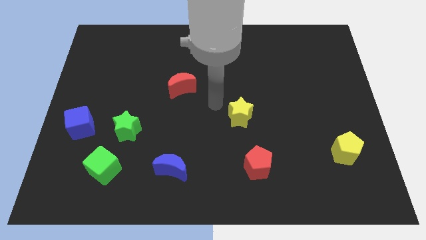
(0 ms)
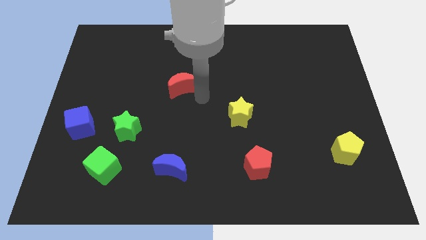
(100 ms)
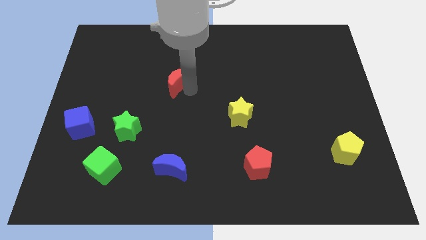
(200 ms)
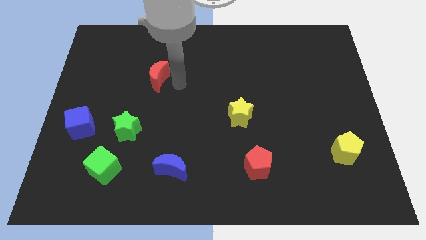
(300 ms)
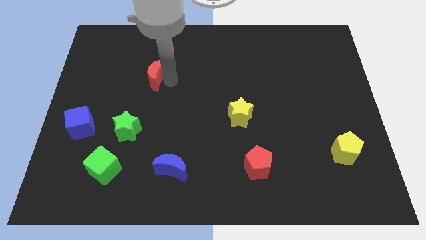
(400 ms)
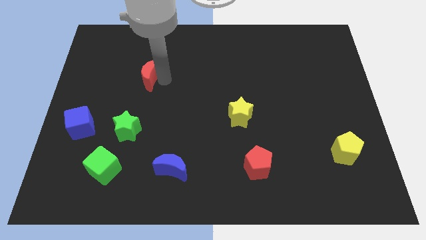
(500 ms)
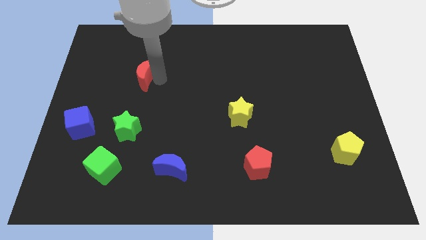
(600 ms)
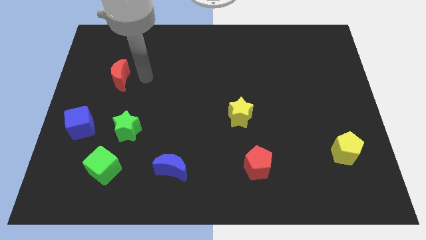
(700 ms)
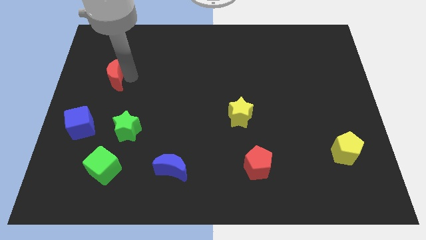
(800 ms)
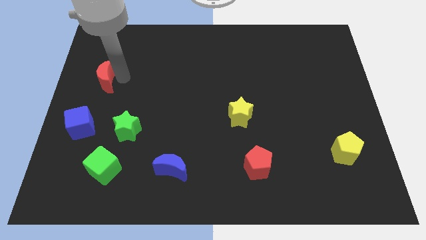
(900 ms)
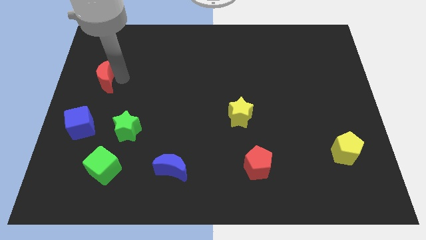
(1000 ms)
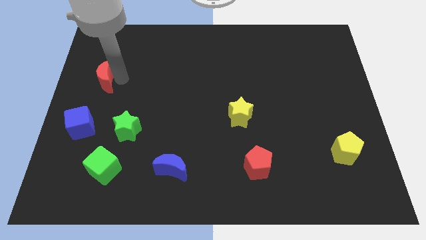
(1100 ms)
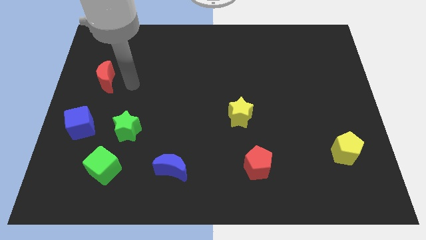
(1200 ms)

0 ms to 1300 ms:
push the red crescent diagonally on the top left side of the green star

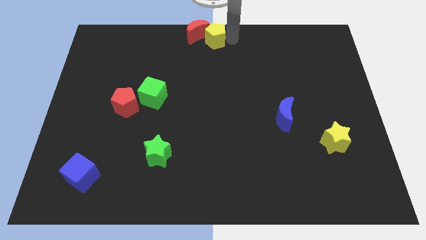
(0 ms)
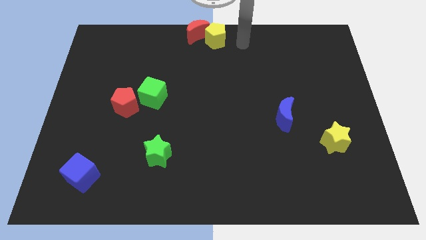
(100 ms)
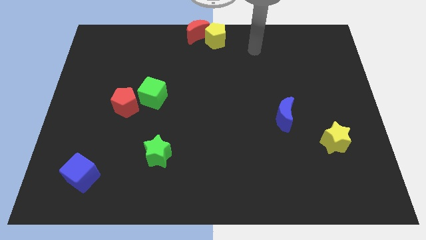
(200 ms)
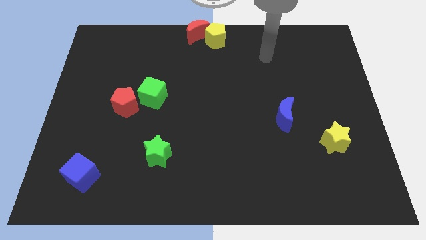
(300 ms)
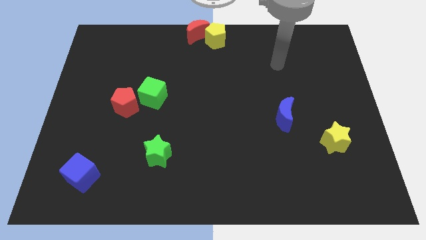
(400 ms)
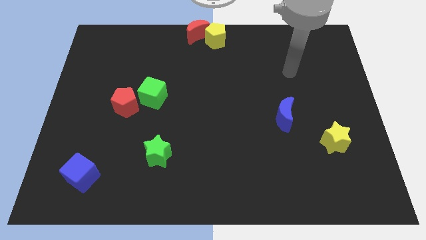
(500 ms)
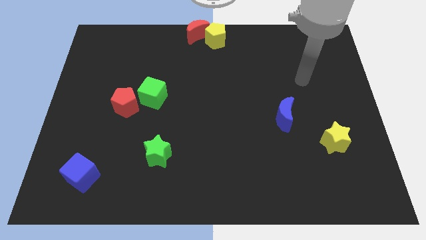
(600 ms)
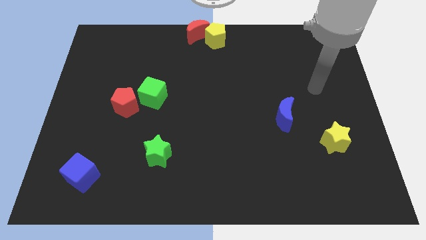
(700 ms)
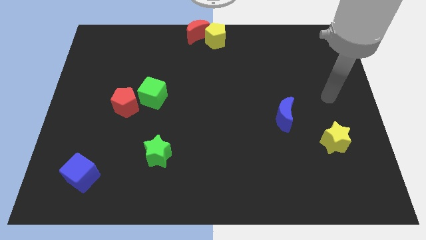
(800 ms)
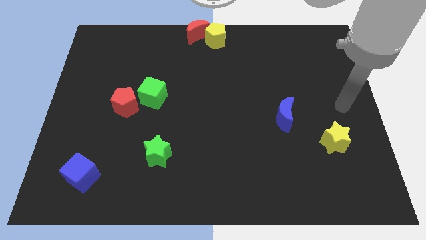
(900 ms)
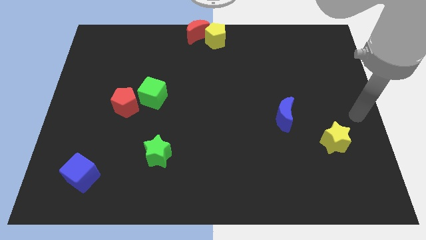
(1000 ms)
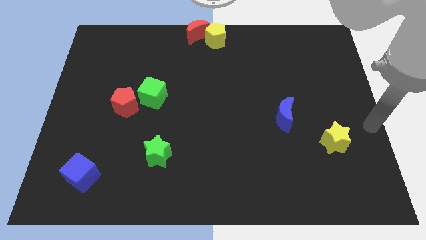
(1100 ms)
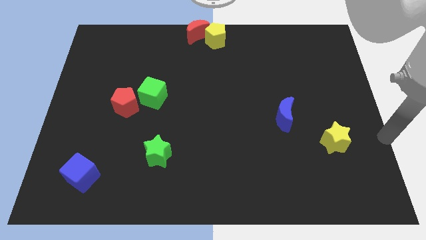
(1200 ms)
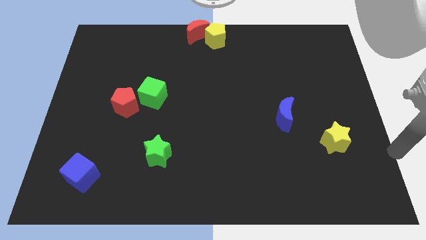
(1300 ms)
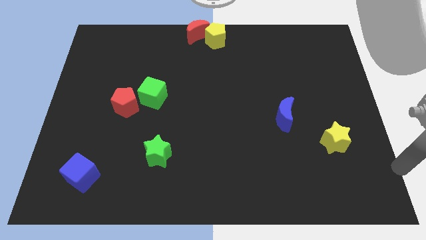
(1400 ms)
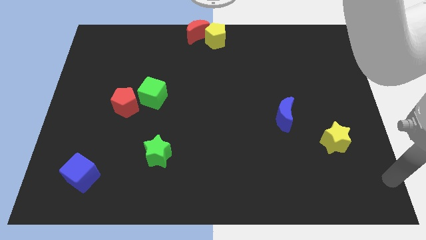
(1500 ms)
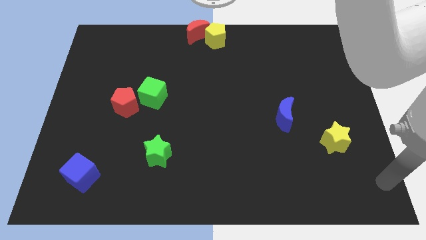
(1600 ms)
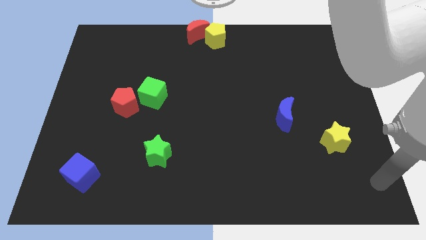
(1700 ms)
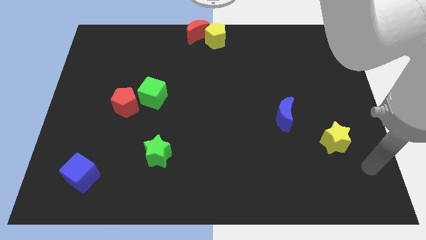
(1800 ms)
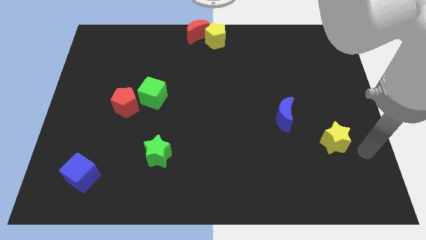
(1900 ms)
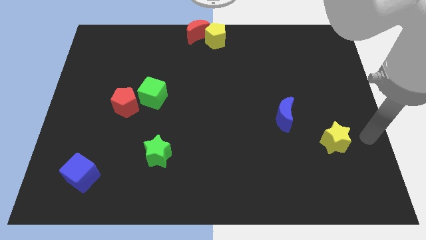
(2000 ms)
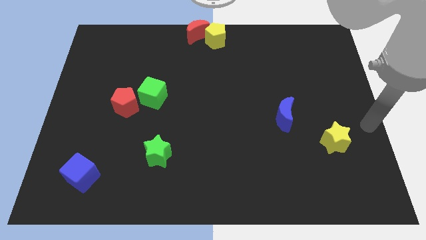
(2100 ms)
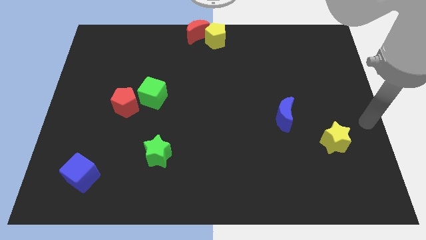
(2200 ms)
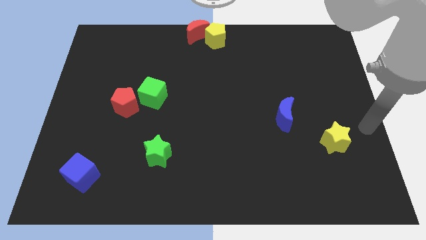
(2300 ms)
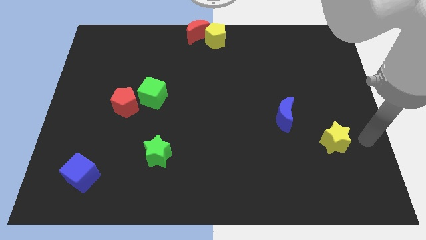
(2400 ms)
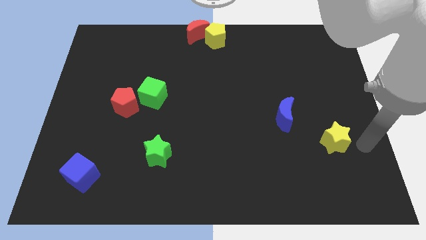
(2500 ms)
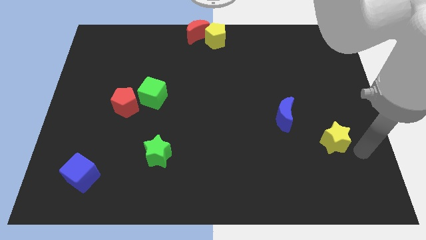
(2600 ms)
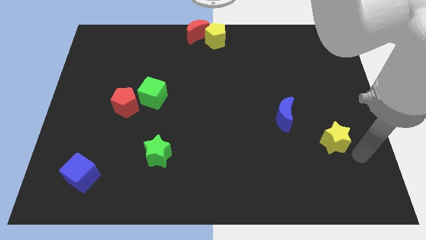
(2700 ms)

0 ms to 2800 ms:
move the arm away from the yellow pentagon

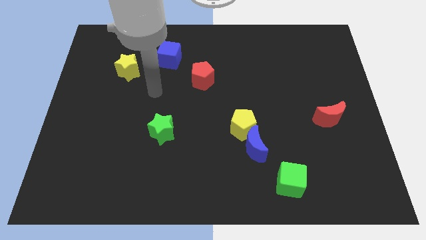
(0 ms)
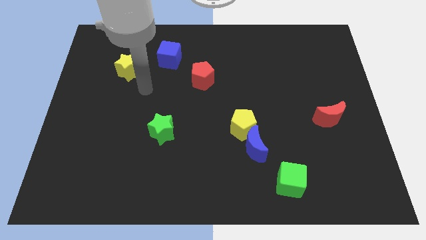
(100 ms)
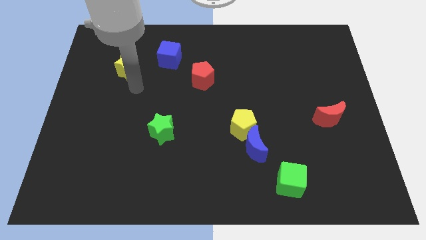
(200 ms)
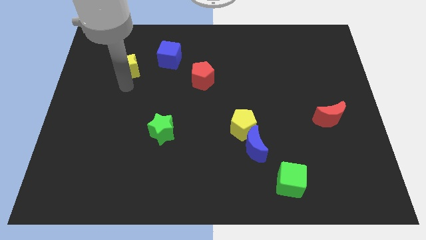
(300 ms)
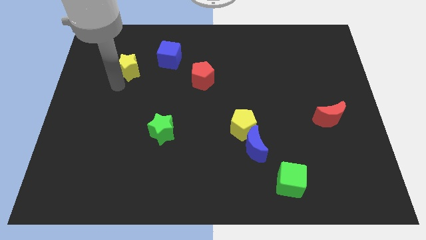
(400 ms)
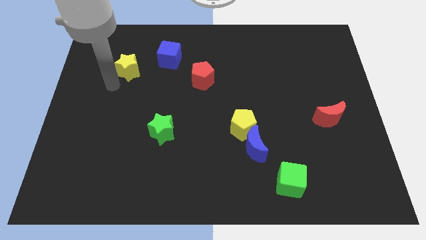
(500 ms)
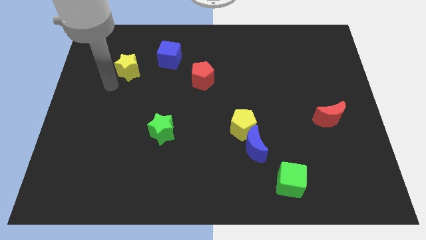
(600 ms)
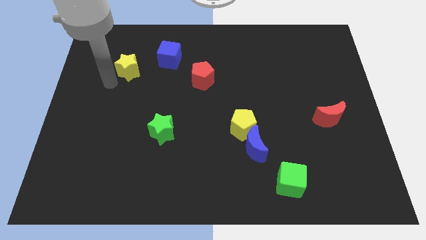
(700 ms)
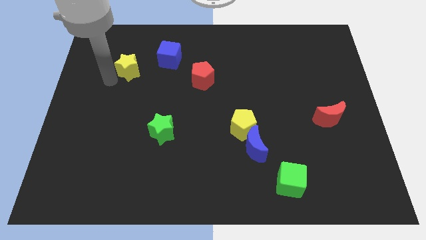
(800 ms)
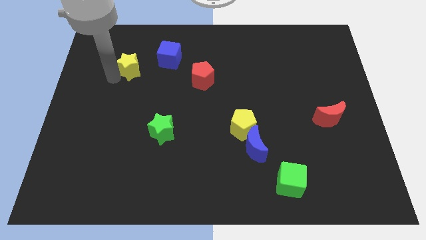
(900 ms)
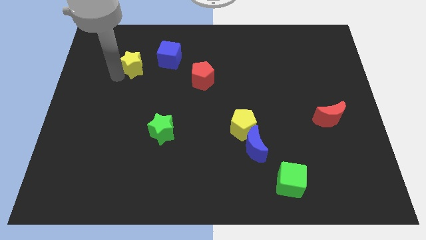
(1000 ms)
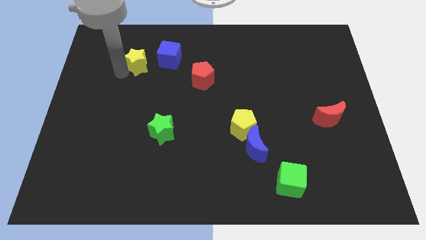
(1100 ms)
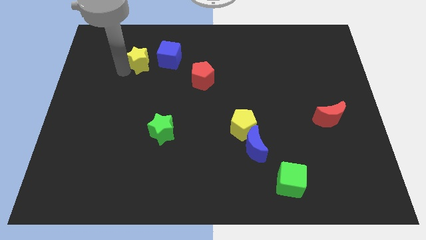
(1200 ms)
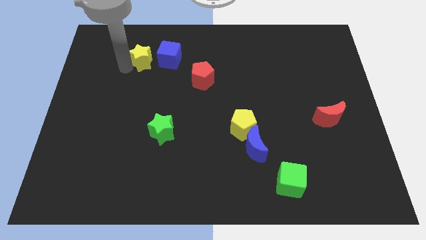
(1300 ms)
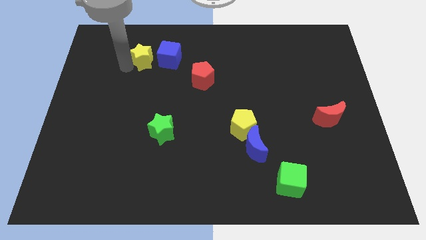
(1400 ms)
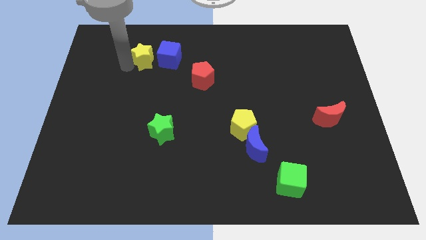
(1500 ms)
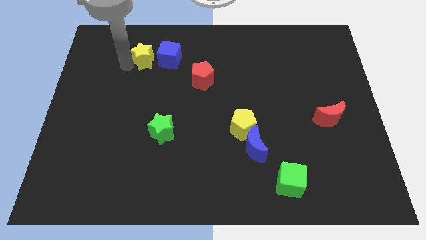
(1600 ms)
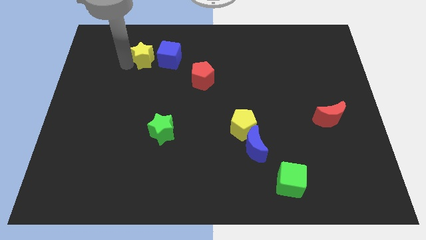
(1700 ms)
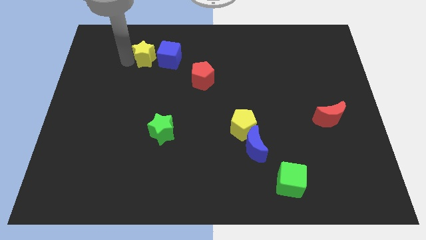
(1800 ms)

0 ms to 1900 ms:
move the yellow star to the left side of the blue cube

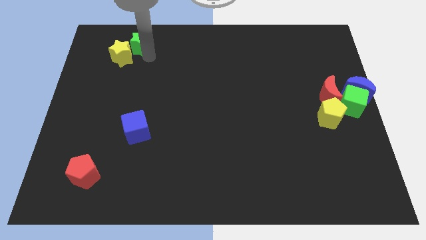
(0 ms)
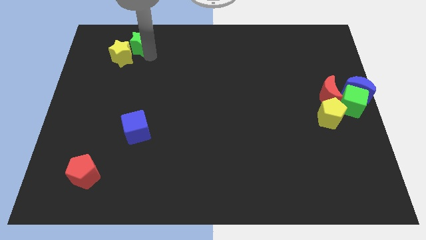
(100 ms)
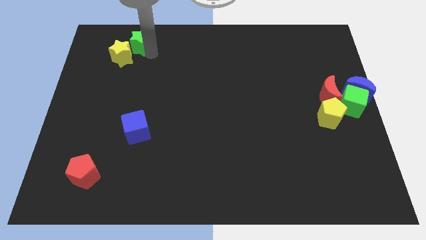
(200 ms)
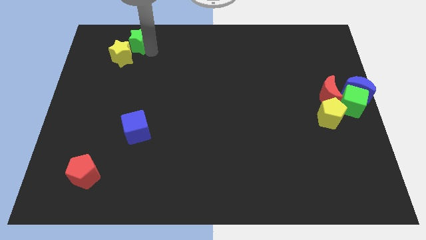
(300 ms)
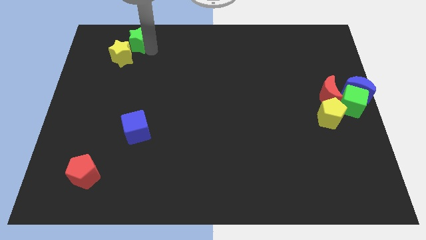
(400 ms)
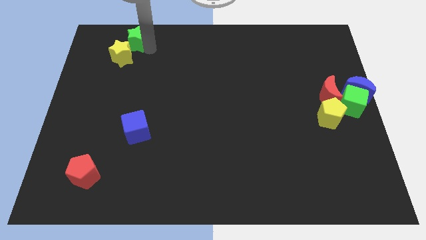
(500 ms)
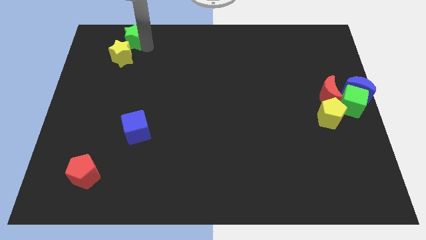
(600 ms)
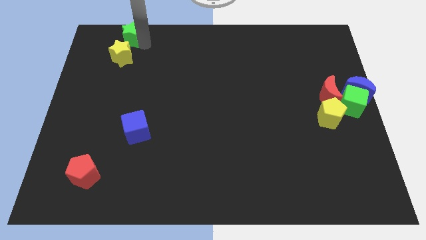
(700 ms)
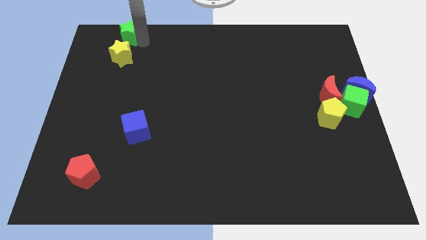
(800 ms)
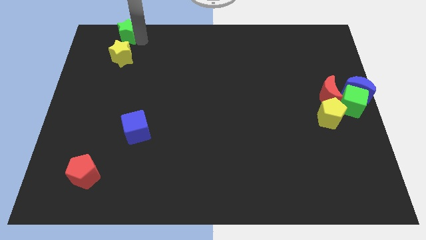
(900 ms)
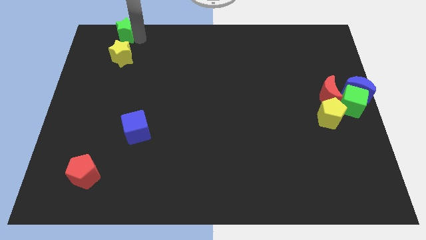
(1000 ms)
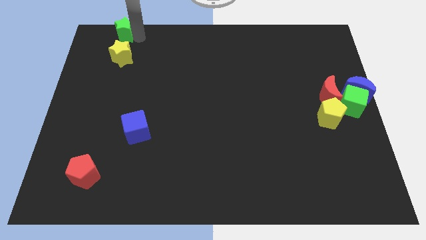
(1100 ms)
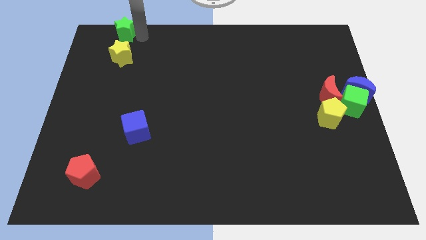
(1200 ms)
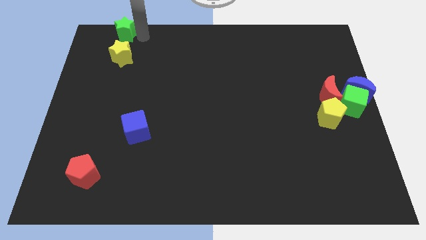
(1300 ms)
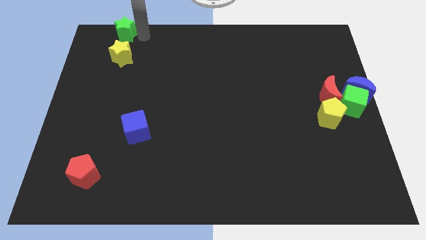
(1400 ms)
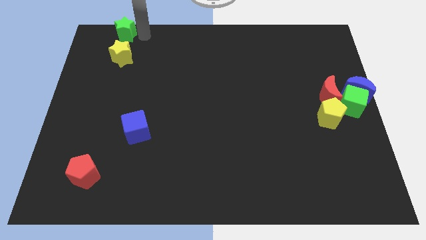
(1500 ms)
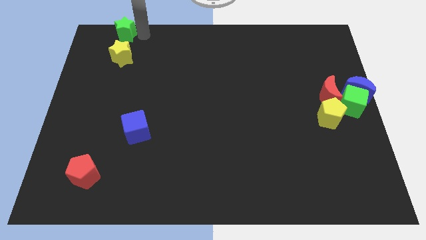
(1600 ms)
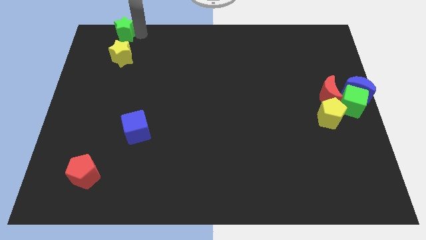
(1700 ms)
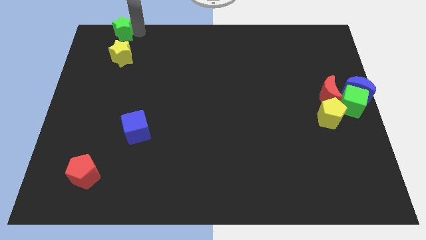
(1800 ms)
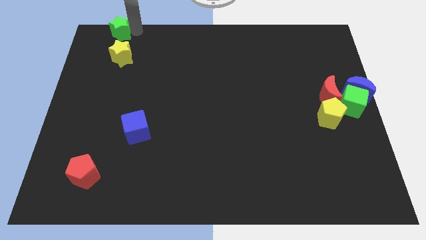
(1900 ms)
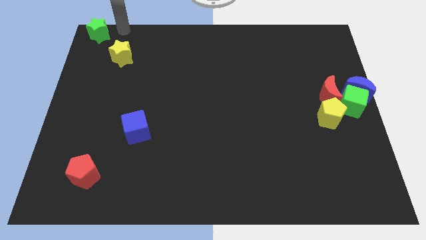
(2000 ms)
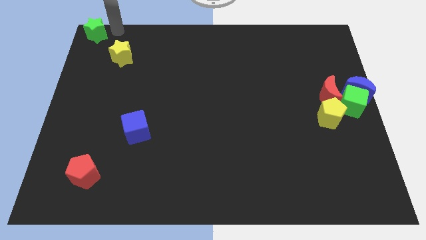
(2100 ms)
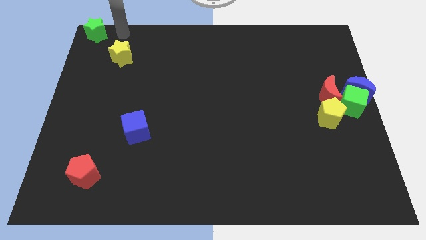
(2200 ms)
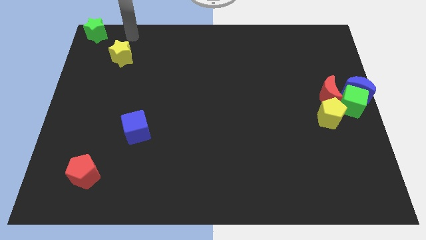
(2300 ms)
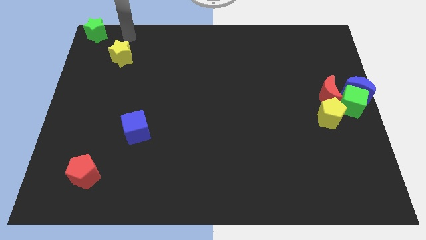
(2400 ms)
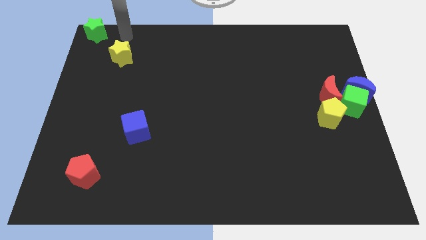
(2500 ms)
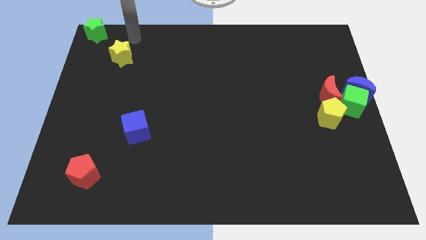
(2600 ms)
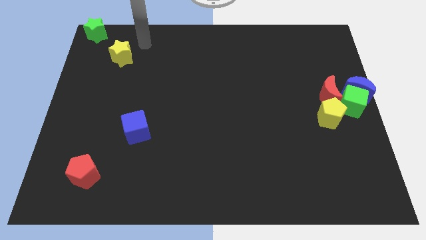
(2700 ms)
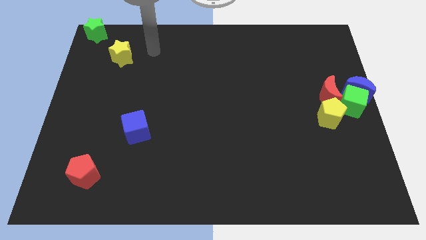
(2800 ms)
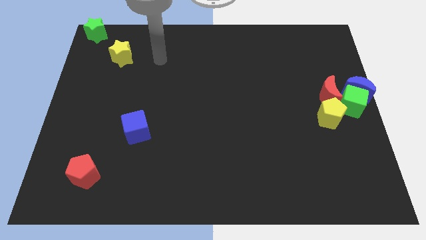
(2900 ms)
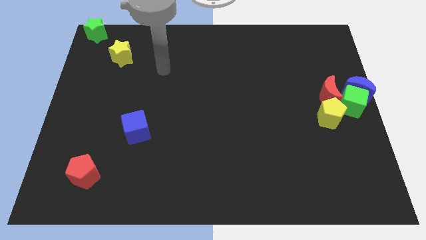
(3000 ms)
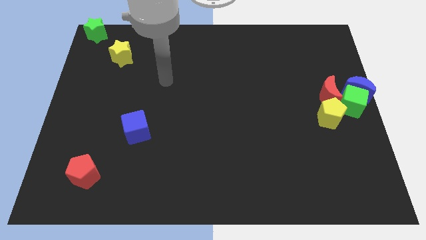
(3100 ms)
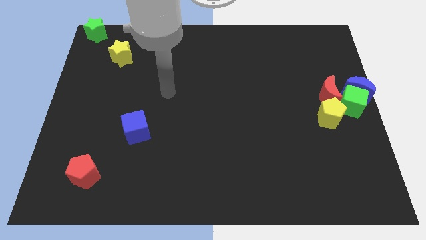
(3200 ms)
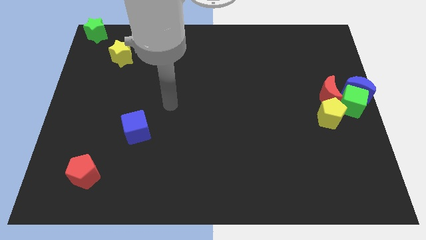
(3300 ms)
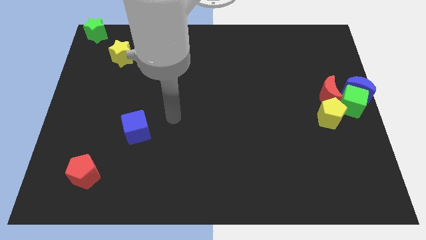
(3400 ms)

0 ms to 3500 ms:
move the green star to the top left
